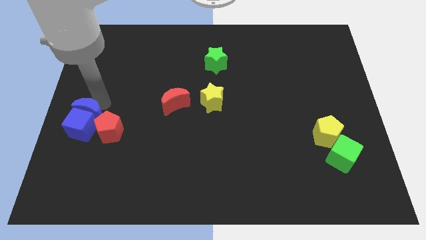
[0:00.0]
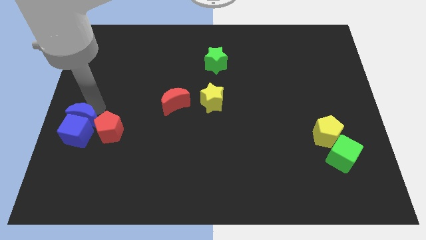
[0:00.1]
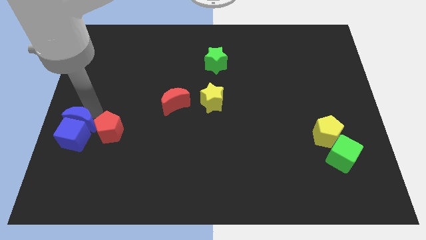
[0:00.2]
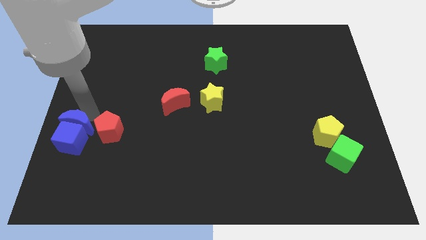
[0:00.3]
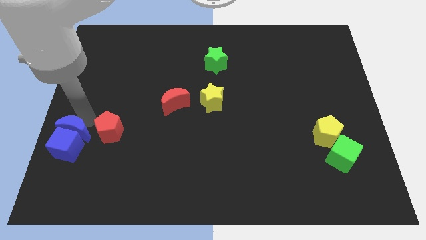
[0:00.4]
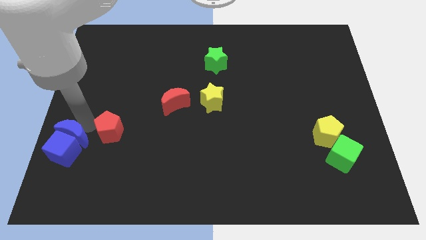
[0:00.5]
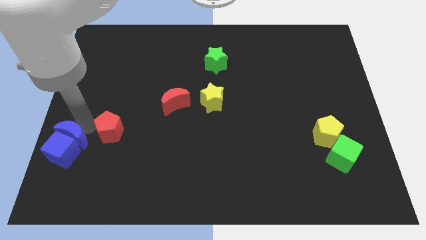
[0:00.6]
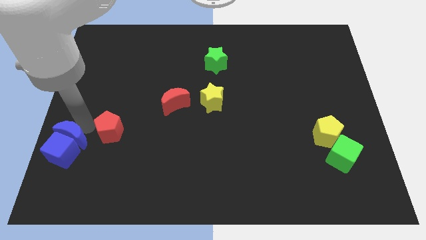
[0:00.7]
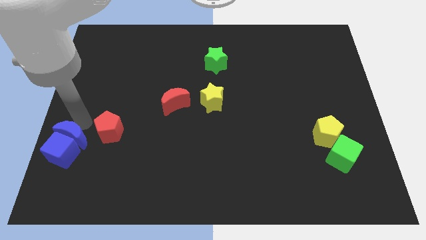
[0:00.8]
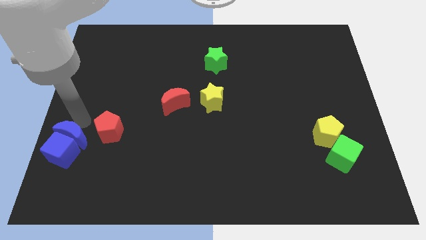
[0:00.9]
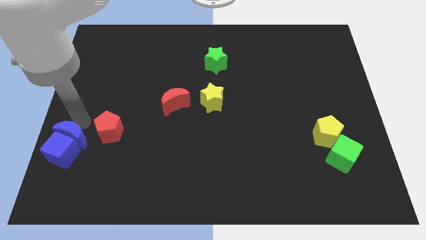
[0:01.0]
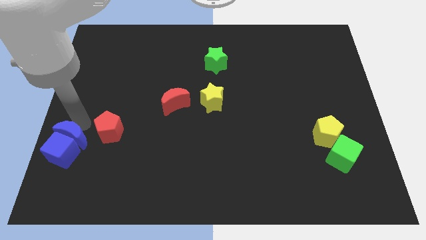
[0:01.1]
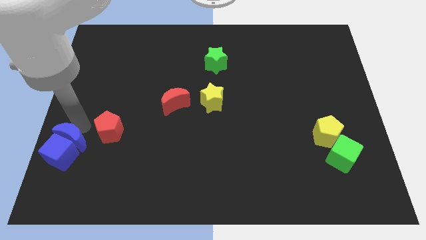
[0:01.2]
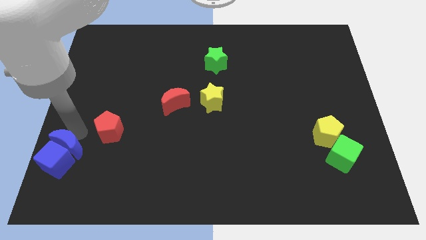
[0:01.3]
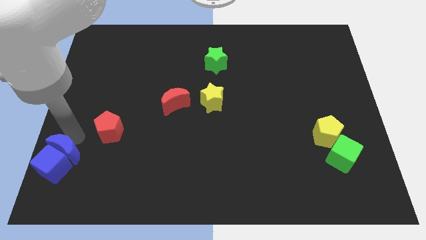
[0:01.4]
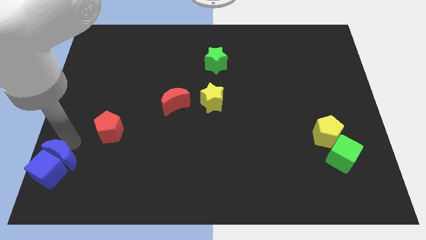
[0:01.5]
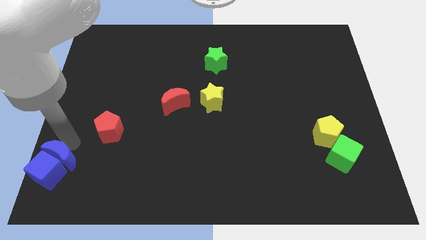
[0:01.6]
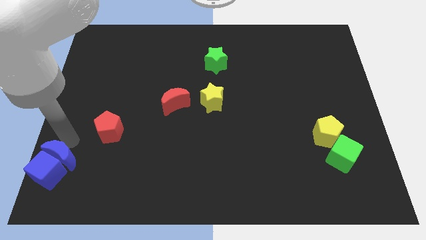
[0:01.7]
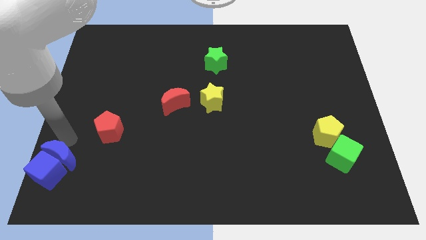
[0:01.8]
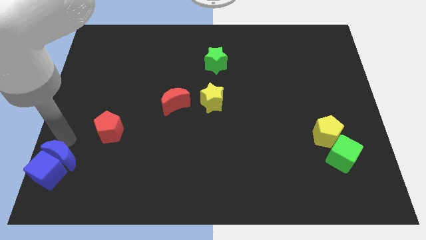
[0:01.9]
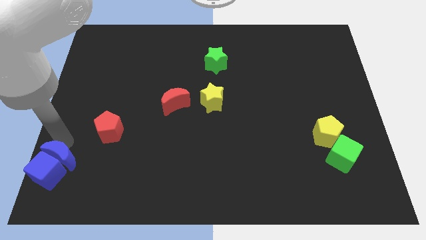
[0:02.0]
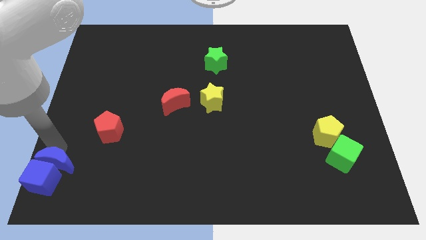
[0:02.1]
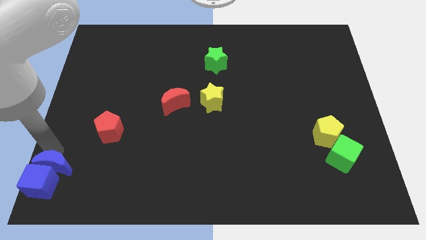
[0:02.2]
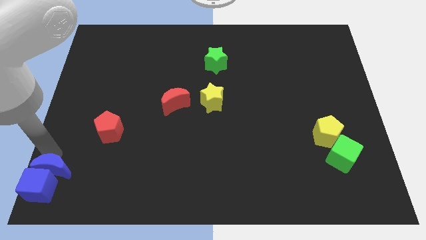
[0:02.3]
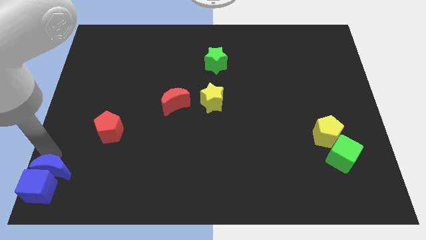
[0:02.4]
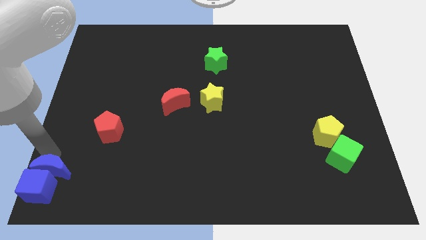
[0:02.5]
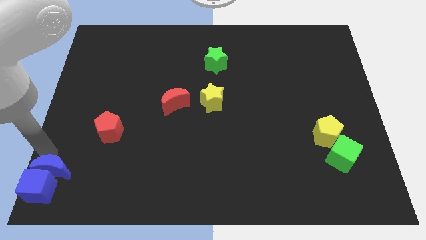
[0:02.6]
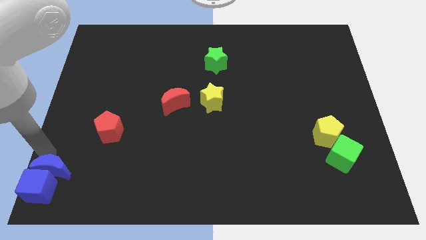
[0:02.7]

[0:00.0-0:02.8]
push the blue blocks towards bottom left corner side

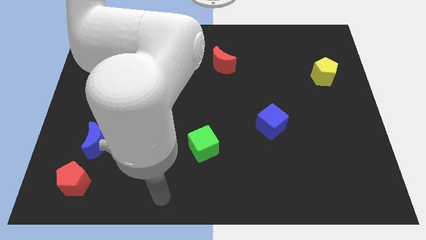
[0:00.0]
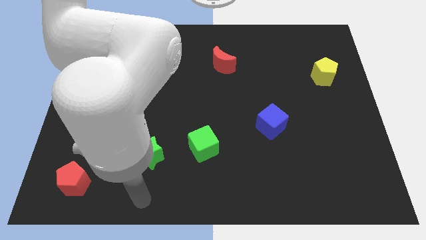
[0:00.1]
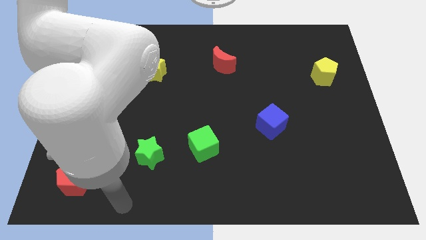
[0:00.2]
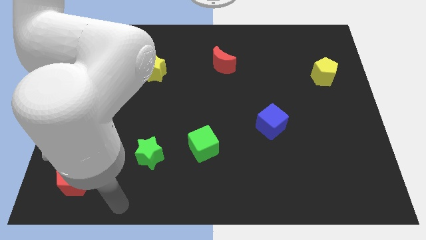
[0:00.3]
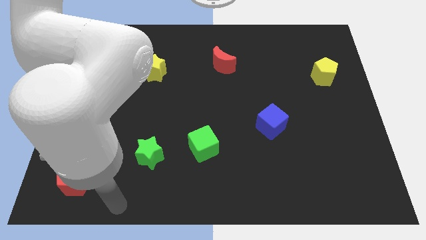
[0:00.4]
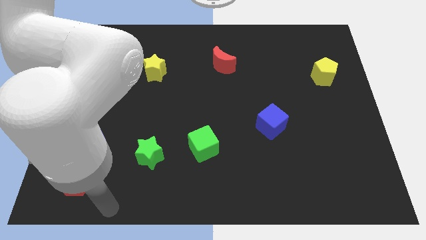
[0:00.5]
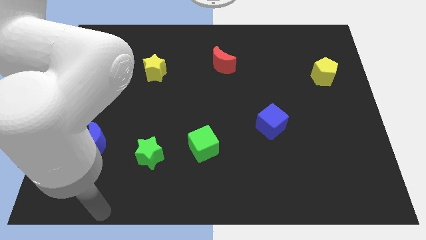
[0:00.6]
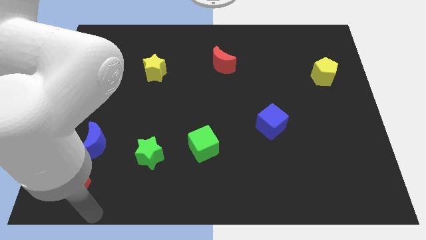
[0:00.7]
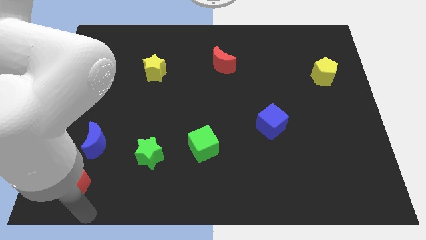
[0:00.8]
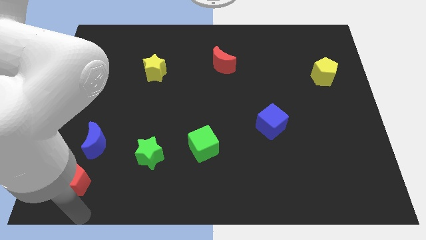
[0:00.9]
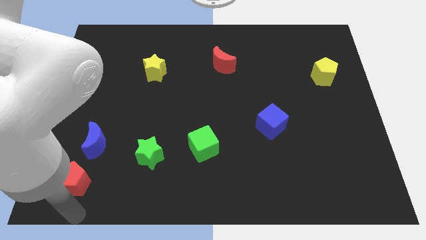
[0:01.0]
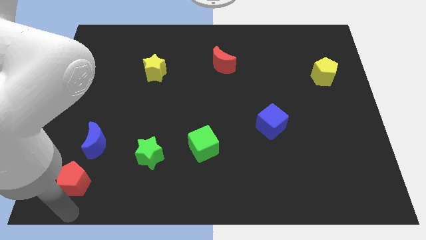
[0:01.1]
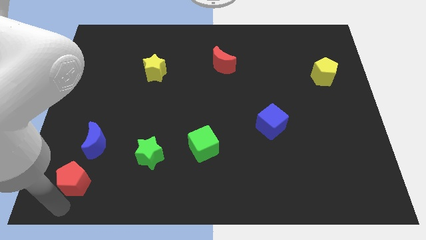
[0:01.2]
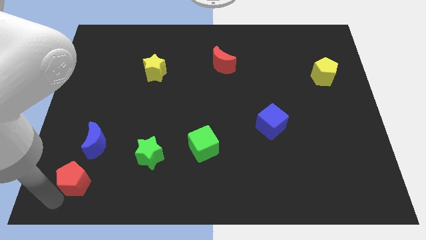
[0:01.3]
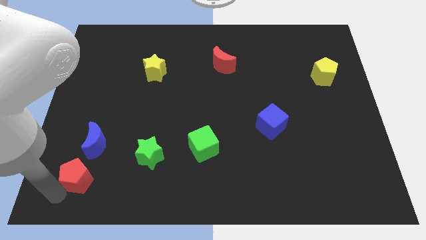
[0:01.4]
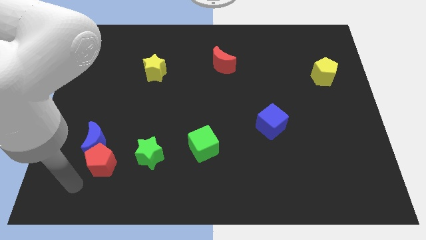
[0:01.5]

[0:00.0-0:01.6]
move your arm towards the red pentagon

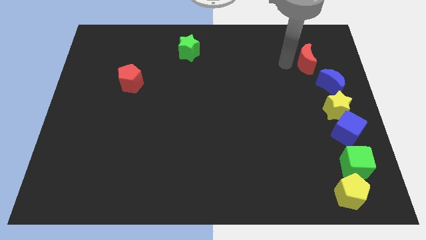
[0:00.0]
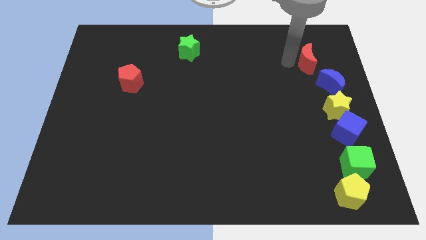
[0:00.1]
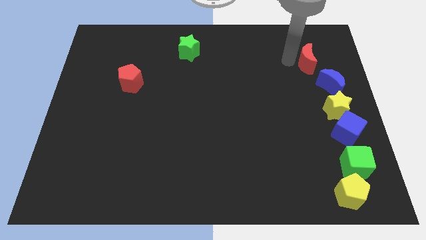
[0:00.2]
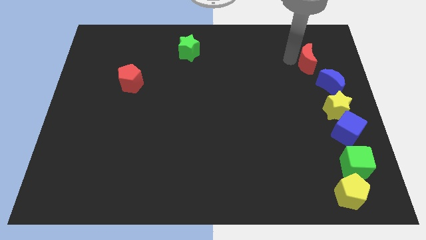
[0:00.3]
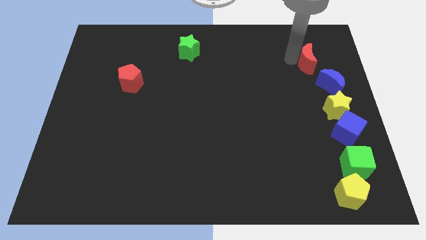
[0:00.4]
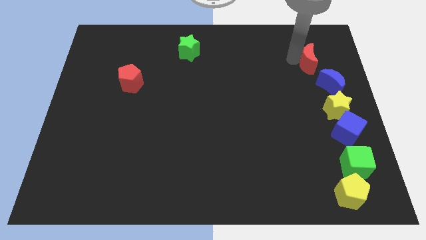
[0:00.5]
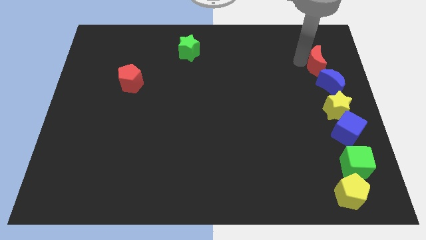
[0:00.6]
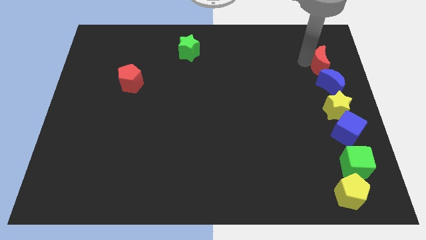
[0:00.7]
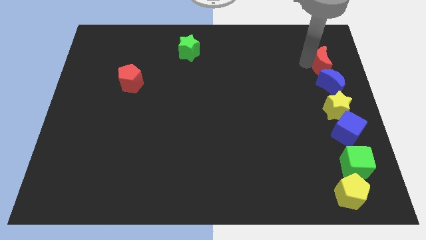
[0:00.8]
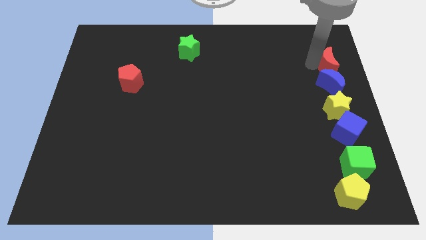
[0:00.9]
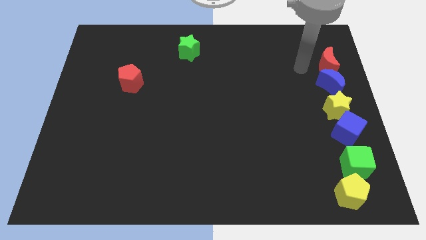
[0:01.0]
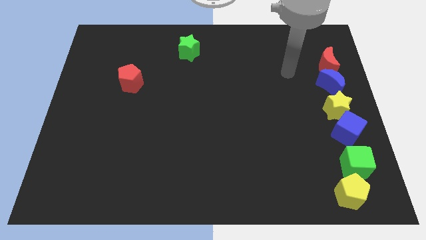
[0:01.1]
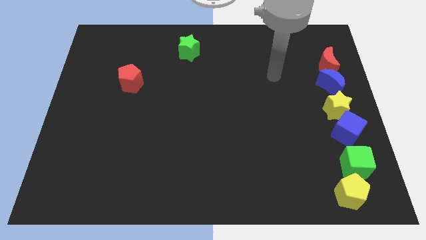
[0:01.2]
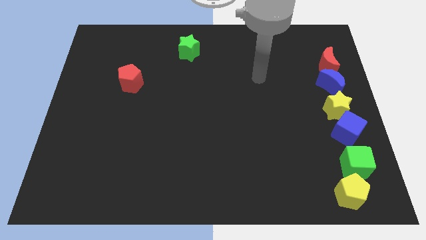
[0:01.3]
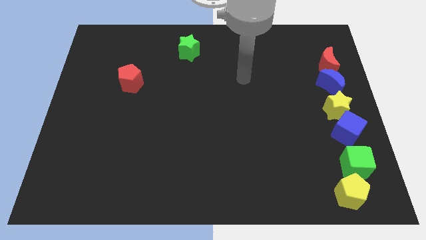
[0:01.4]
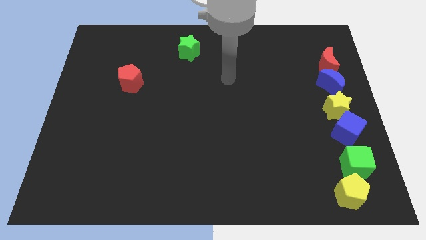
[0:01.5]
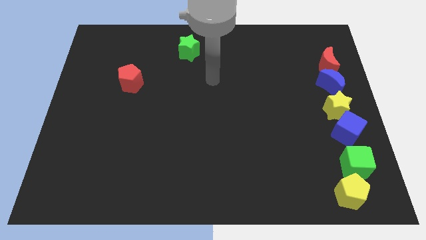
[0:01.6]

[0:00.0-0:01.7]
put the red crescent on top of blocks to form a vertical line

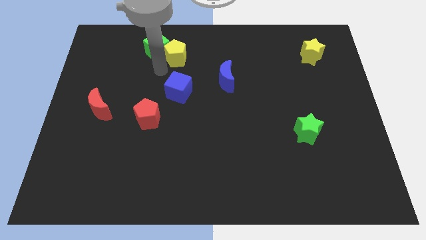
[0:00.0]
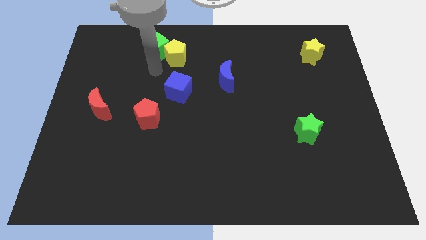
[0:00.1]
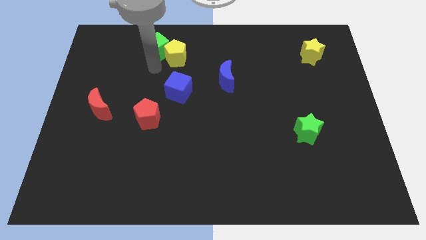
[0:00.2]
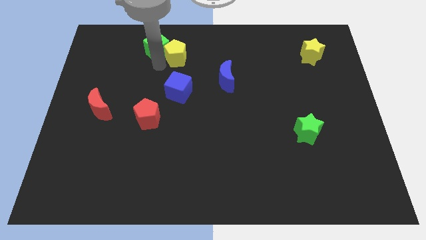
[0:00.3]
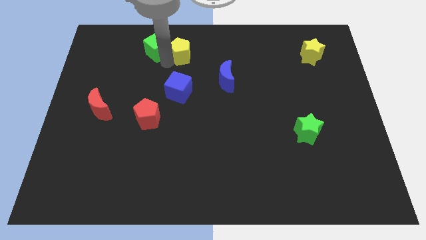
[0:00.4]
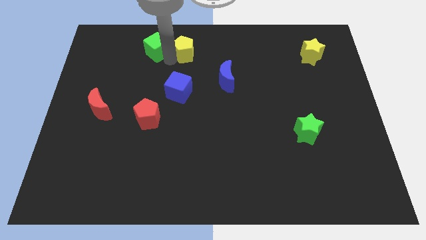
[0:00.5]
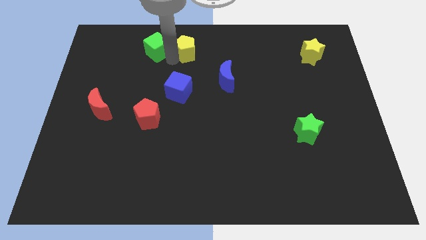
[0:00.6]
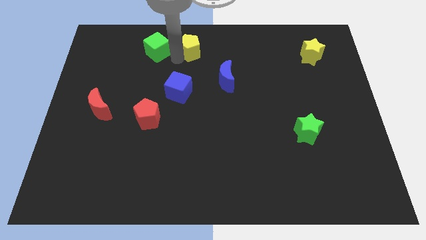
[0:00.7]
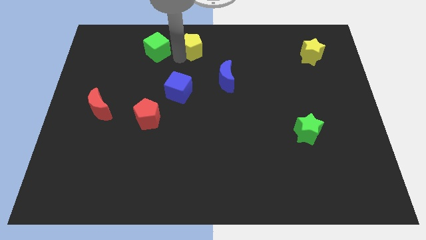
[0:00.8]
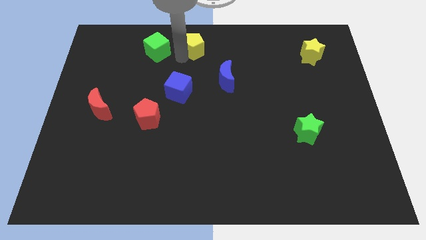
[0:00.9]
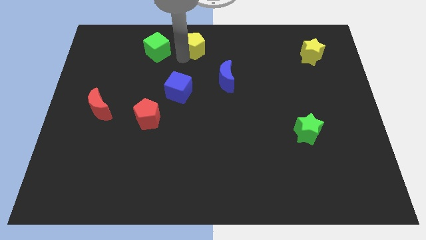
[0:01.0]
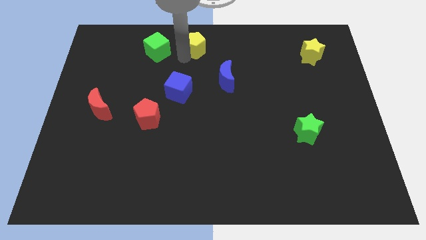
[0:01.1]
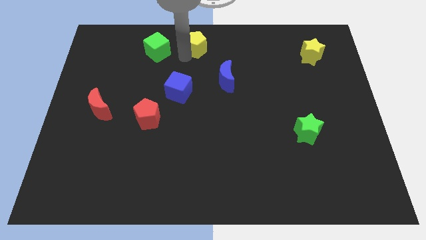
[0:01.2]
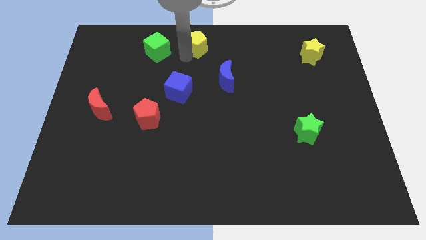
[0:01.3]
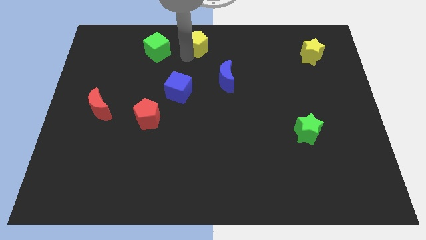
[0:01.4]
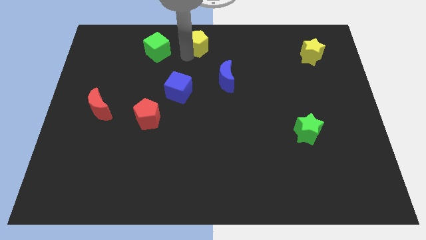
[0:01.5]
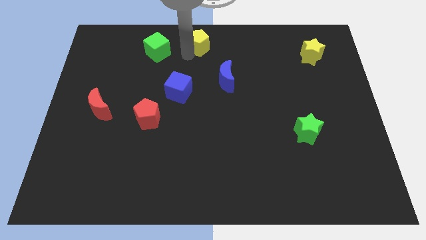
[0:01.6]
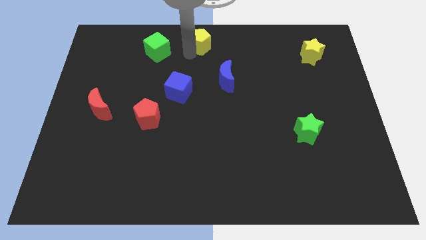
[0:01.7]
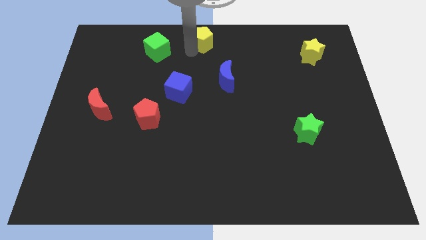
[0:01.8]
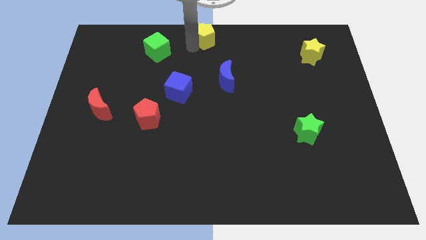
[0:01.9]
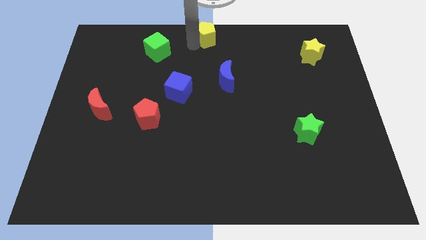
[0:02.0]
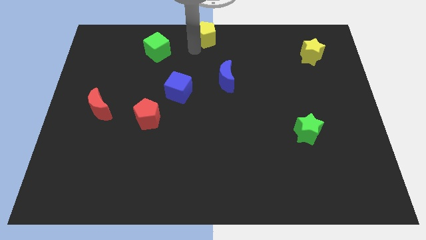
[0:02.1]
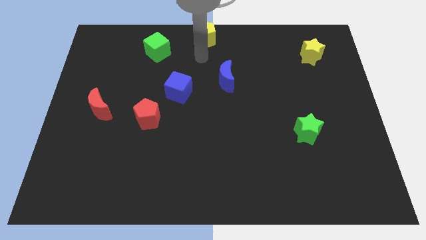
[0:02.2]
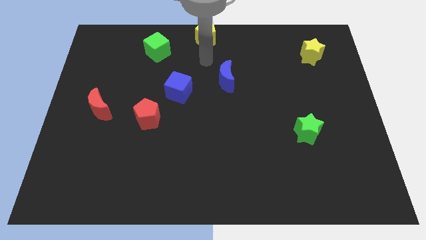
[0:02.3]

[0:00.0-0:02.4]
place the yellow pentagon right to the green cube

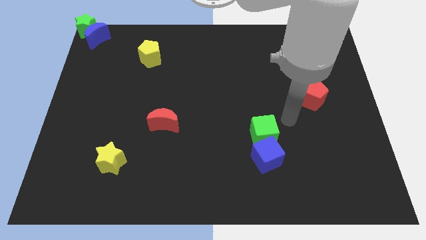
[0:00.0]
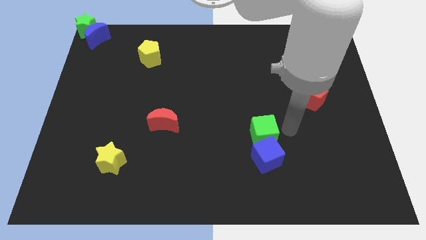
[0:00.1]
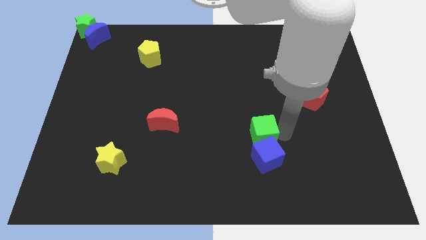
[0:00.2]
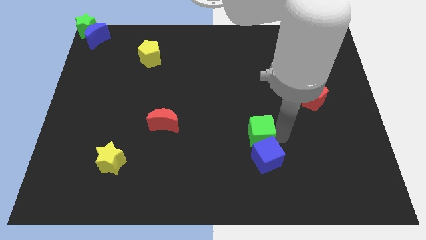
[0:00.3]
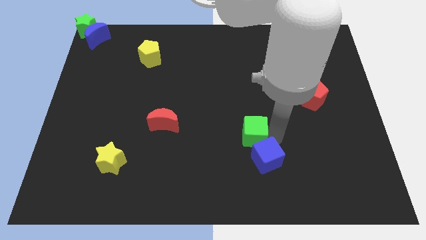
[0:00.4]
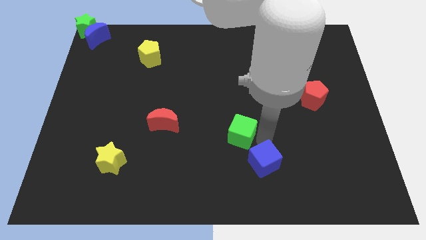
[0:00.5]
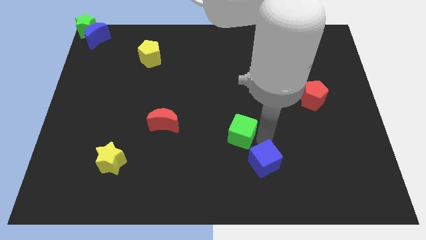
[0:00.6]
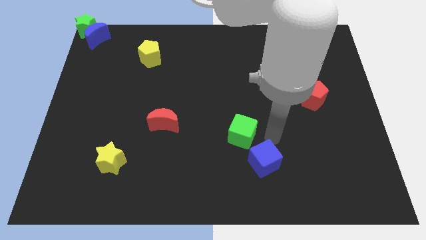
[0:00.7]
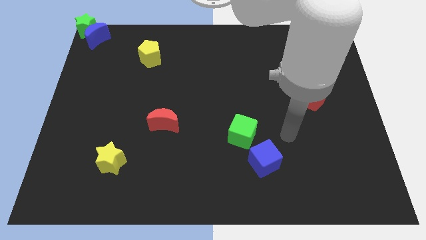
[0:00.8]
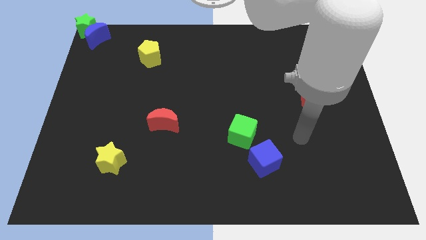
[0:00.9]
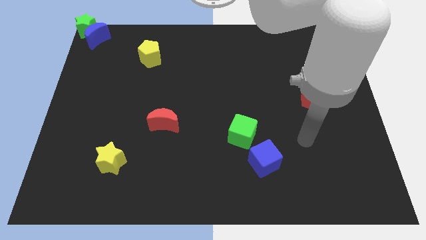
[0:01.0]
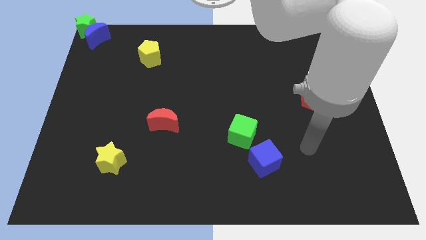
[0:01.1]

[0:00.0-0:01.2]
move the green cube towards the left a bit
